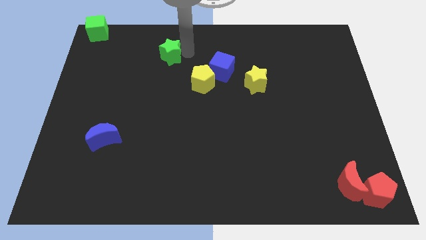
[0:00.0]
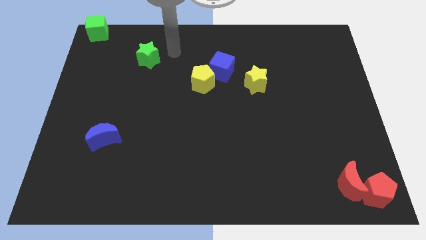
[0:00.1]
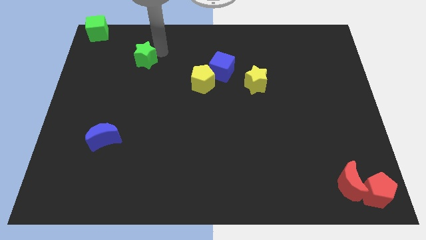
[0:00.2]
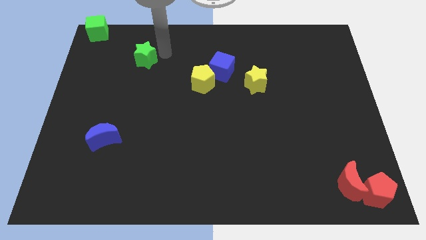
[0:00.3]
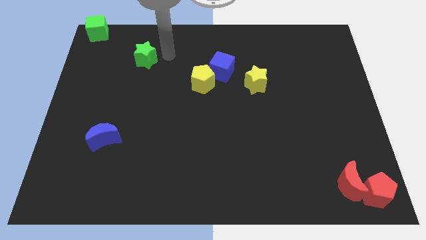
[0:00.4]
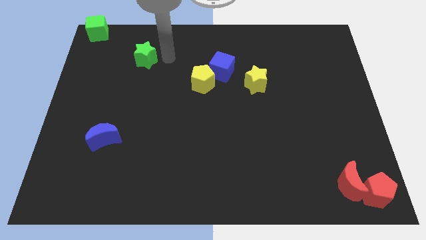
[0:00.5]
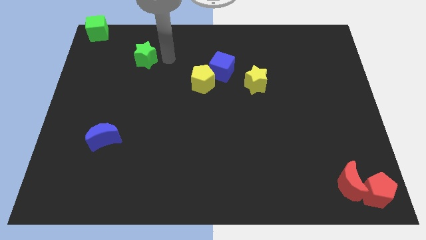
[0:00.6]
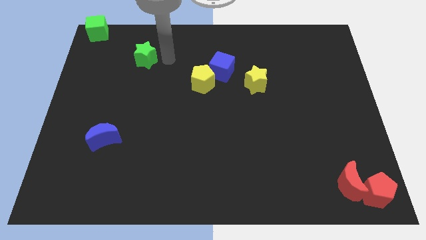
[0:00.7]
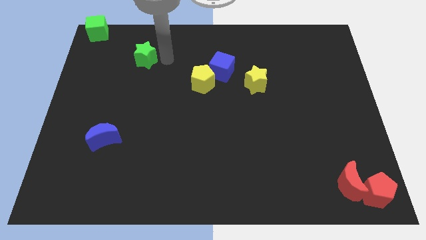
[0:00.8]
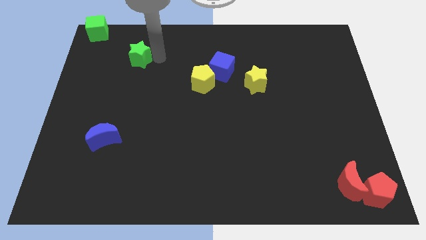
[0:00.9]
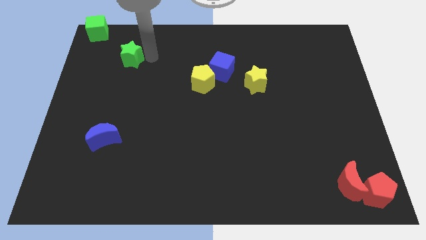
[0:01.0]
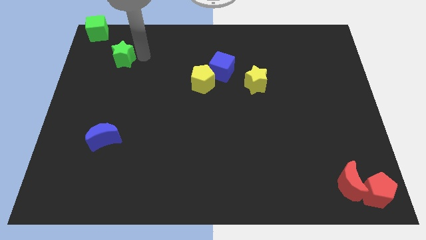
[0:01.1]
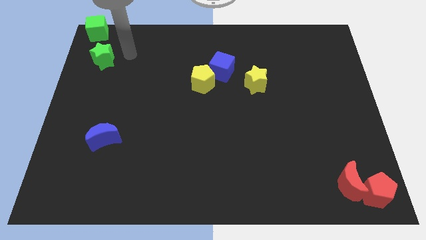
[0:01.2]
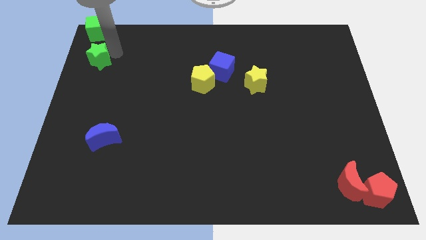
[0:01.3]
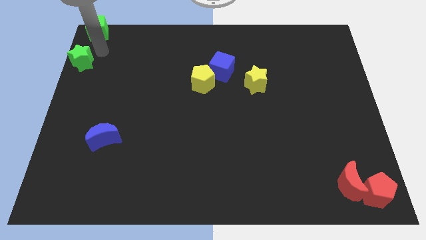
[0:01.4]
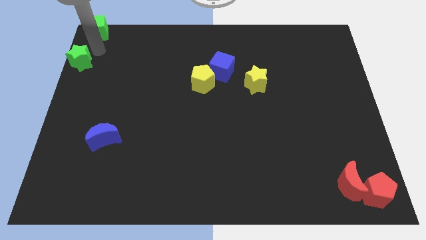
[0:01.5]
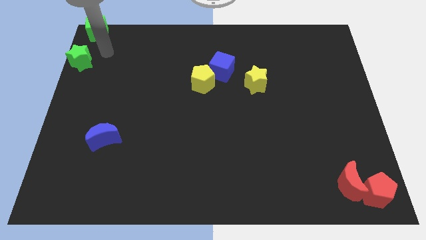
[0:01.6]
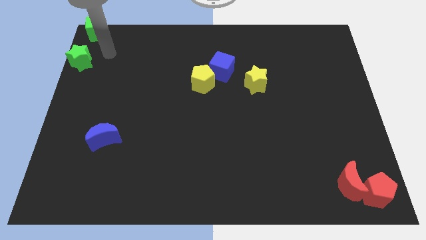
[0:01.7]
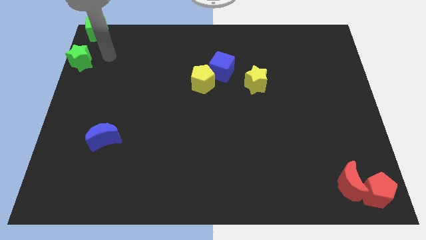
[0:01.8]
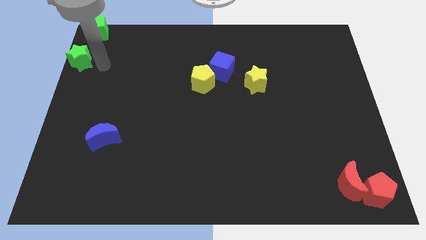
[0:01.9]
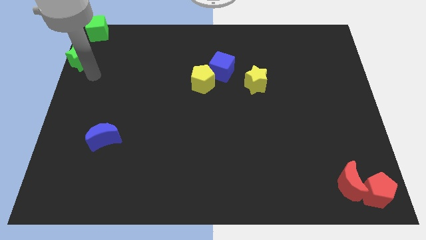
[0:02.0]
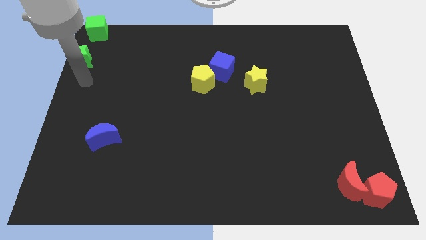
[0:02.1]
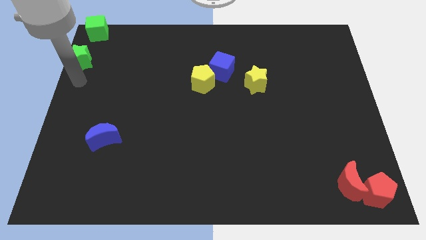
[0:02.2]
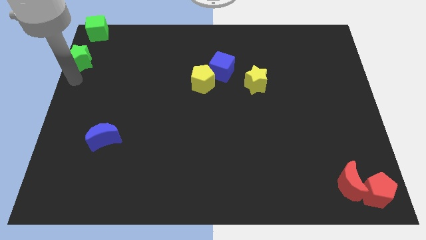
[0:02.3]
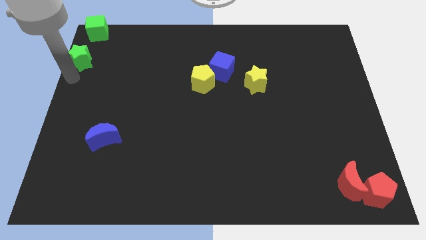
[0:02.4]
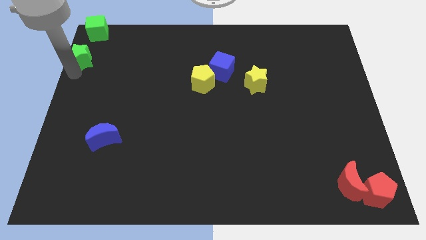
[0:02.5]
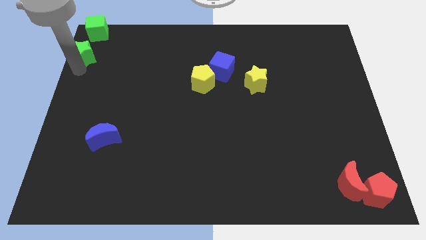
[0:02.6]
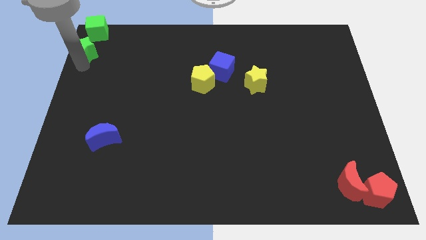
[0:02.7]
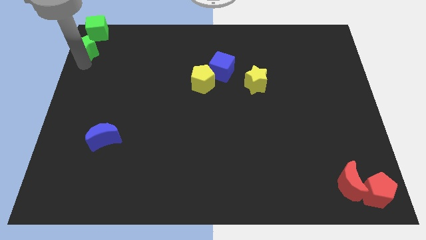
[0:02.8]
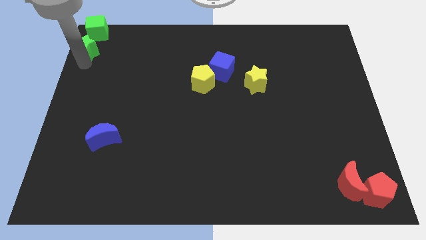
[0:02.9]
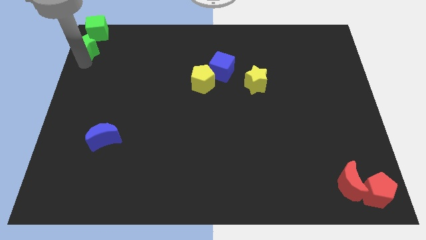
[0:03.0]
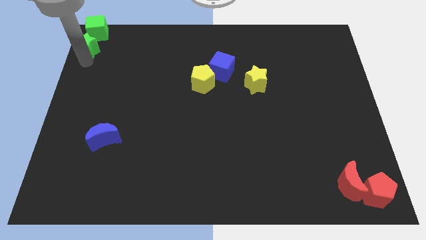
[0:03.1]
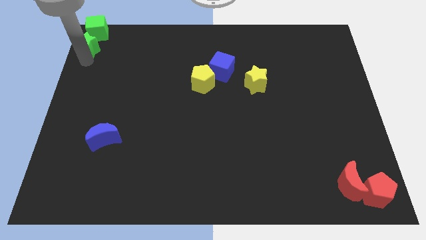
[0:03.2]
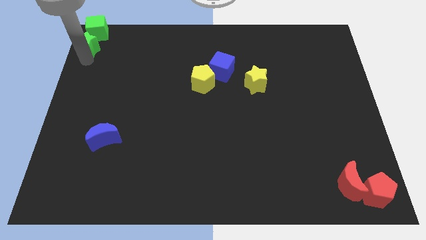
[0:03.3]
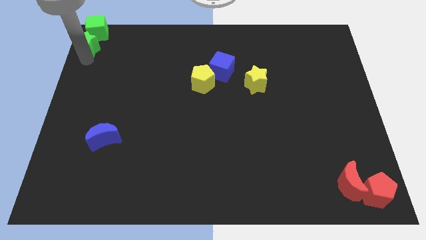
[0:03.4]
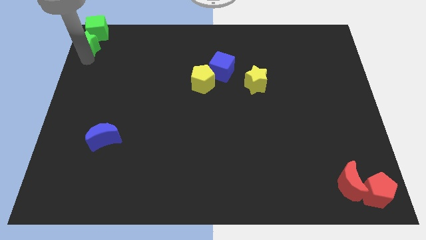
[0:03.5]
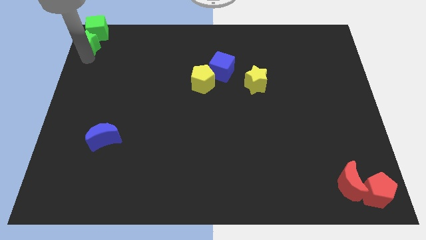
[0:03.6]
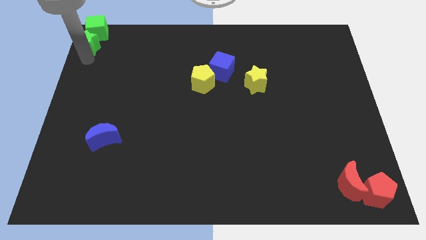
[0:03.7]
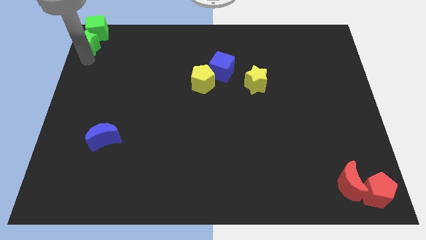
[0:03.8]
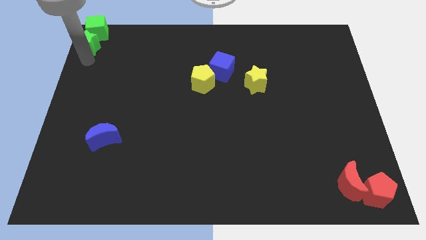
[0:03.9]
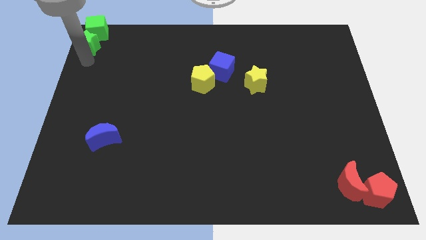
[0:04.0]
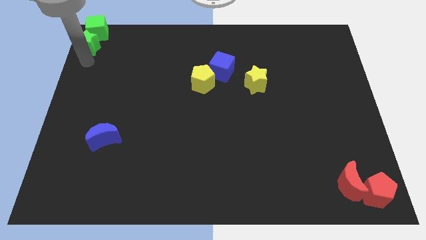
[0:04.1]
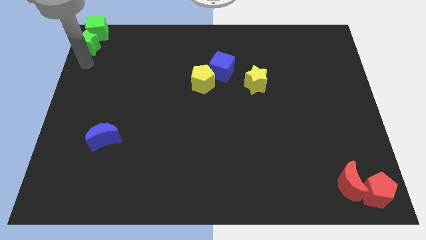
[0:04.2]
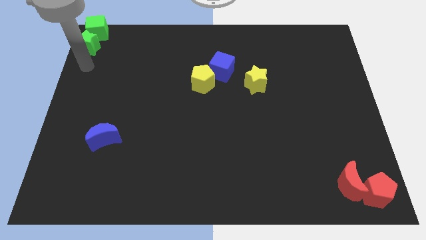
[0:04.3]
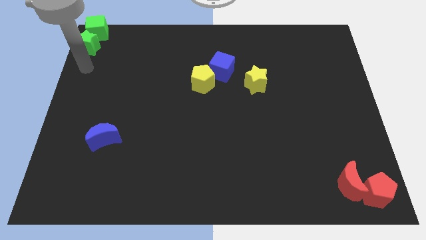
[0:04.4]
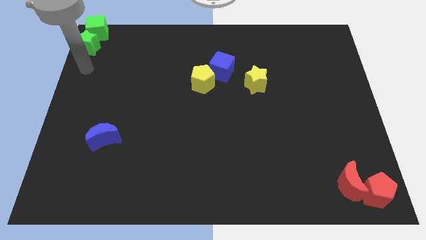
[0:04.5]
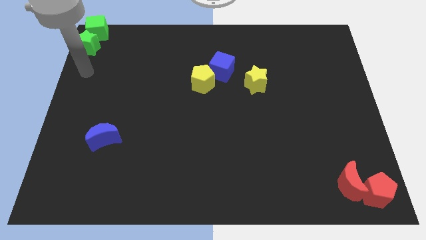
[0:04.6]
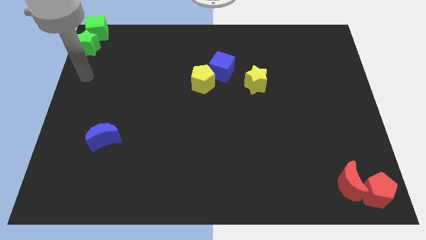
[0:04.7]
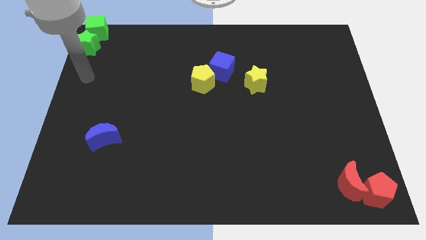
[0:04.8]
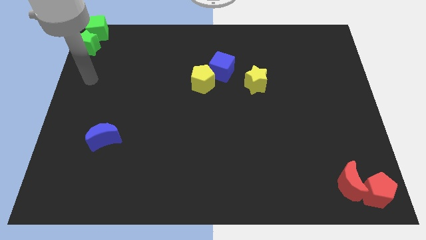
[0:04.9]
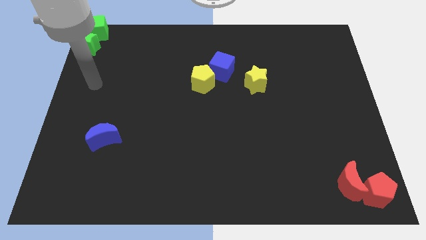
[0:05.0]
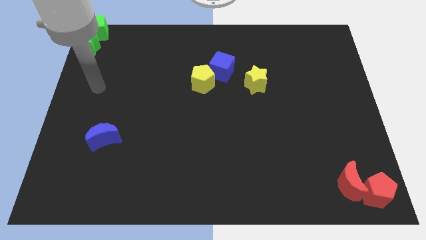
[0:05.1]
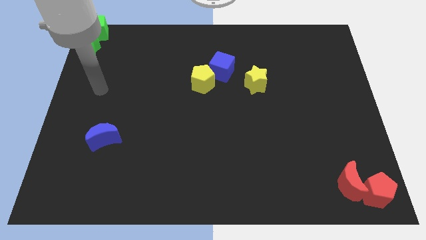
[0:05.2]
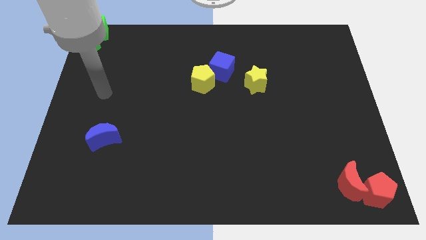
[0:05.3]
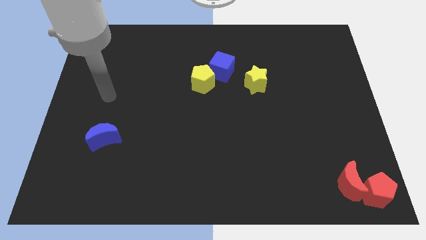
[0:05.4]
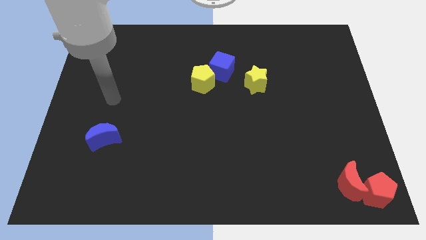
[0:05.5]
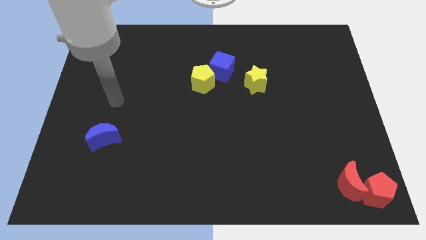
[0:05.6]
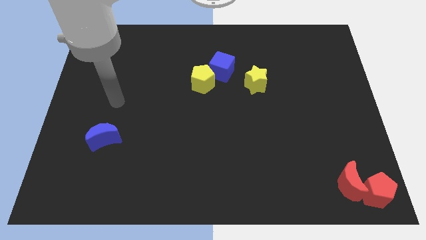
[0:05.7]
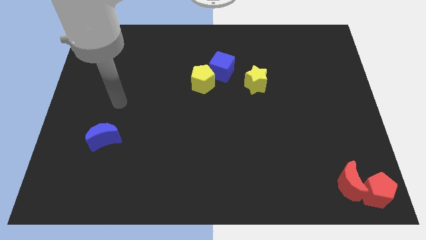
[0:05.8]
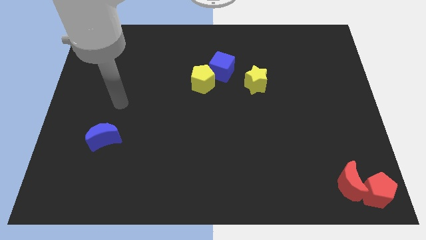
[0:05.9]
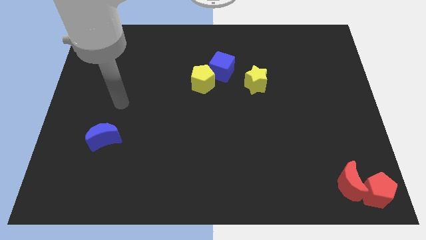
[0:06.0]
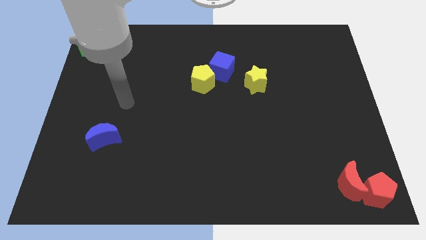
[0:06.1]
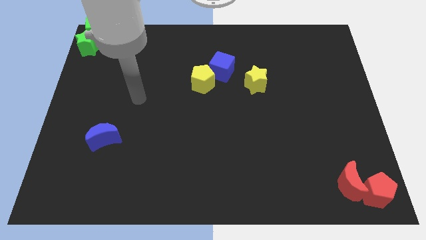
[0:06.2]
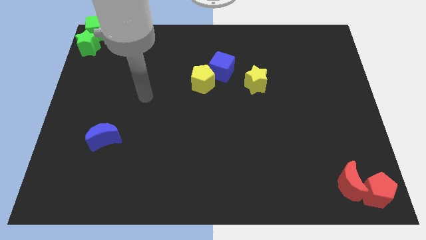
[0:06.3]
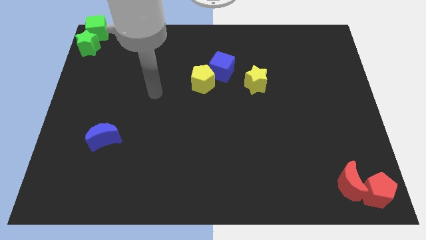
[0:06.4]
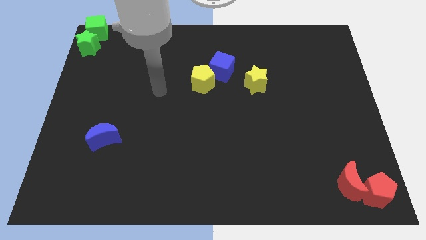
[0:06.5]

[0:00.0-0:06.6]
move the green star to the bottom of the green cube

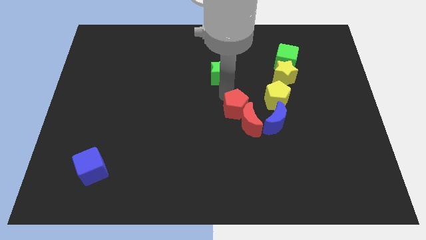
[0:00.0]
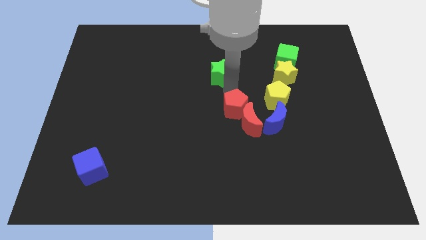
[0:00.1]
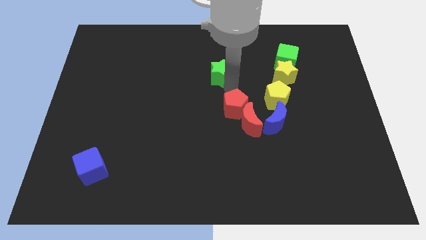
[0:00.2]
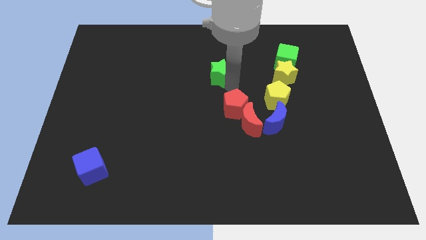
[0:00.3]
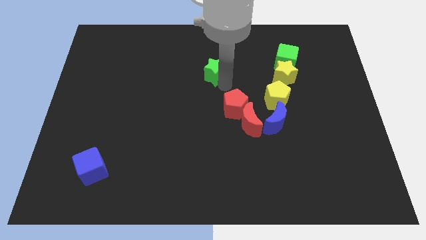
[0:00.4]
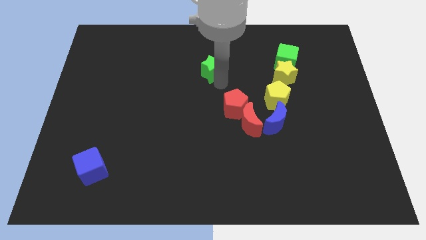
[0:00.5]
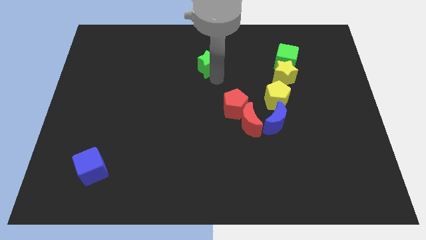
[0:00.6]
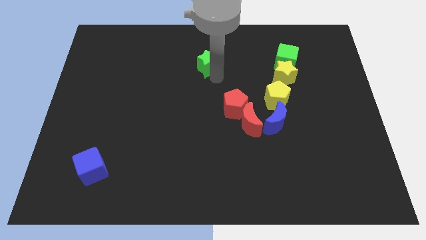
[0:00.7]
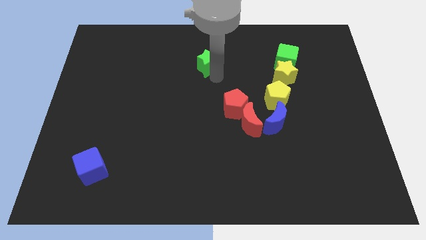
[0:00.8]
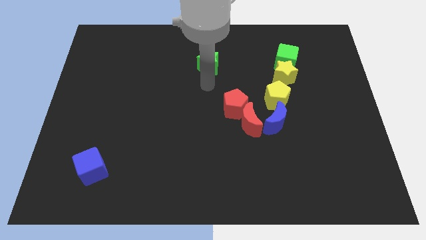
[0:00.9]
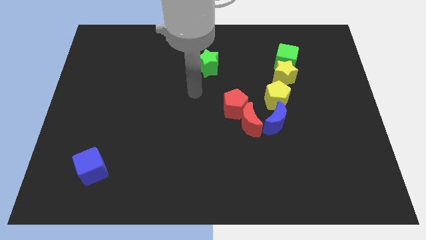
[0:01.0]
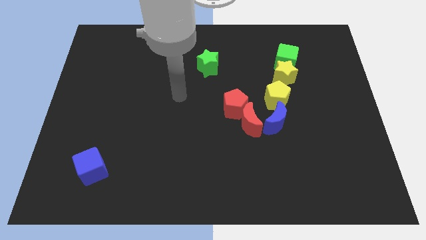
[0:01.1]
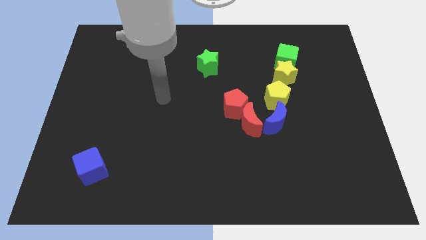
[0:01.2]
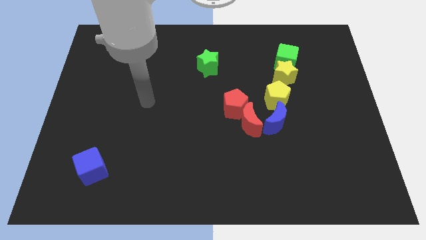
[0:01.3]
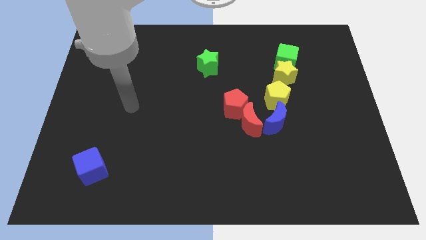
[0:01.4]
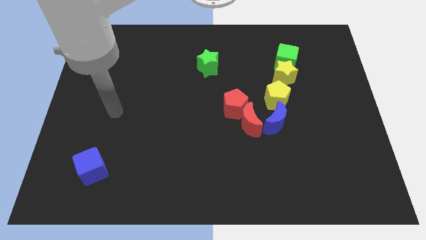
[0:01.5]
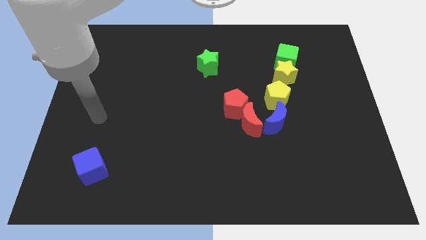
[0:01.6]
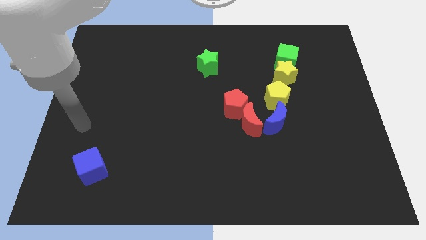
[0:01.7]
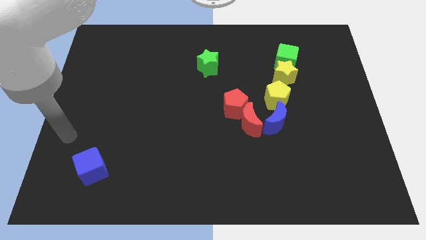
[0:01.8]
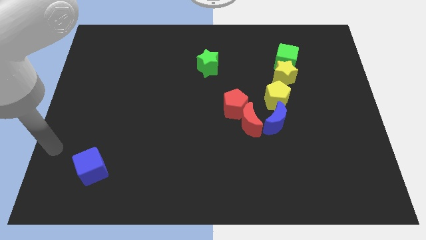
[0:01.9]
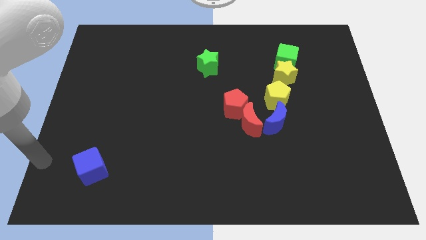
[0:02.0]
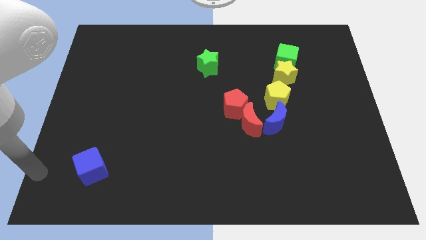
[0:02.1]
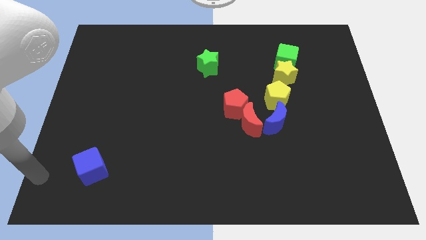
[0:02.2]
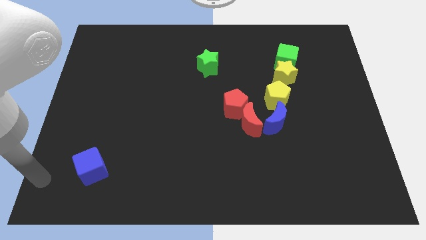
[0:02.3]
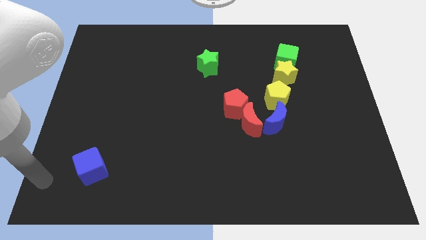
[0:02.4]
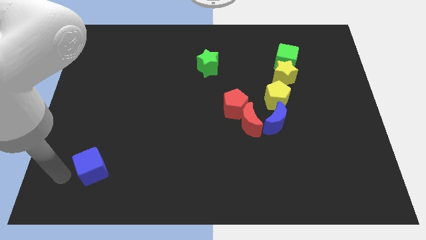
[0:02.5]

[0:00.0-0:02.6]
move the green star slightly to the top center
